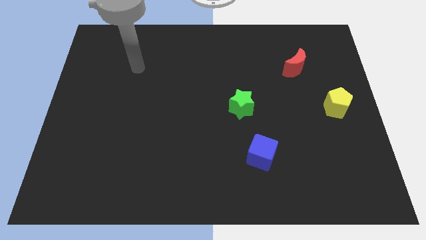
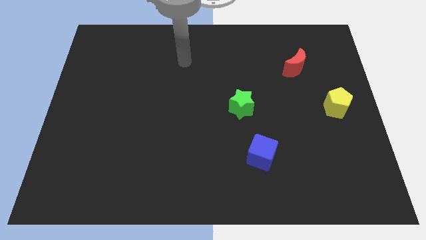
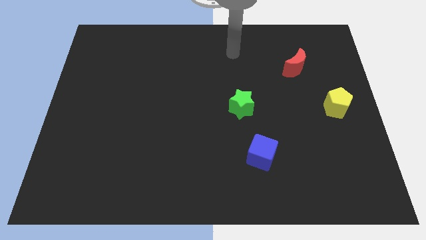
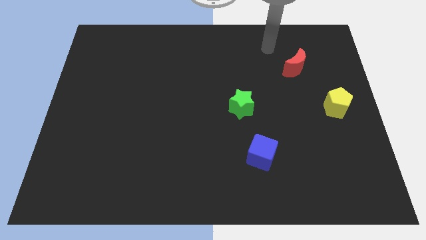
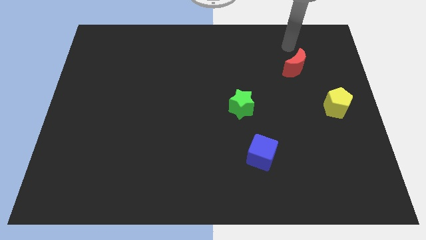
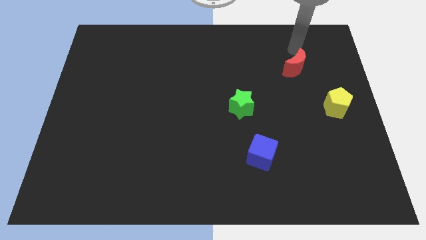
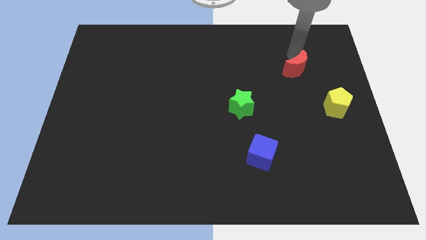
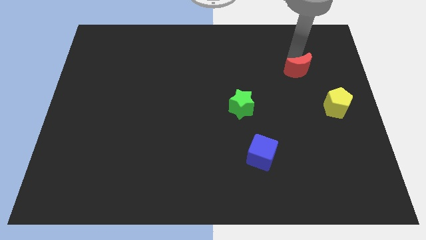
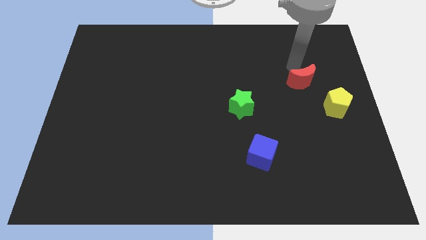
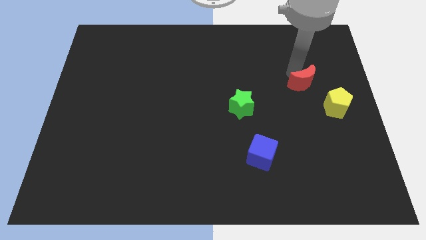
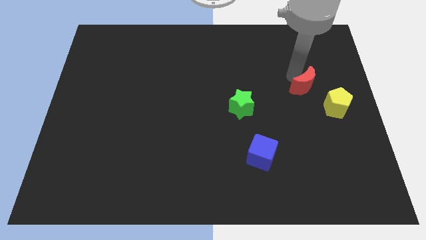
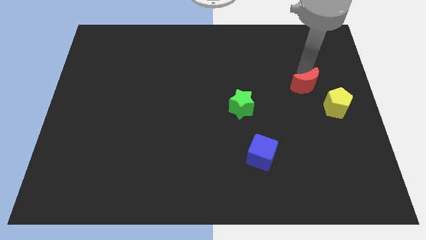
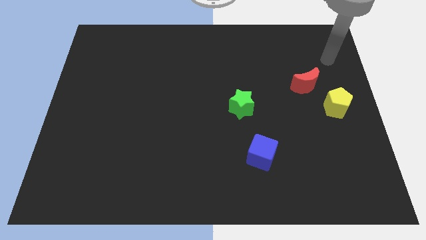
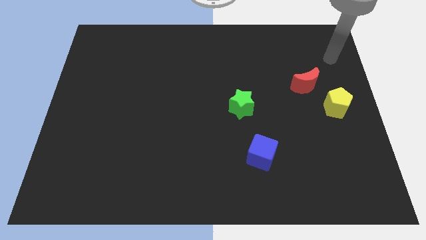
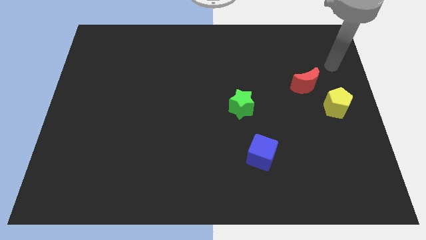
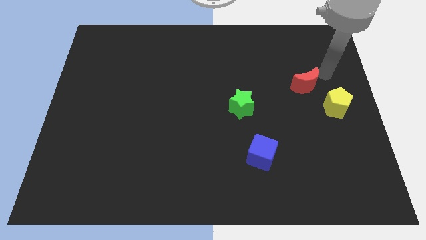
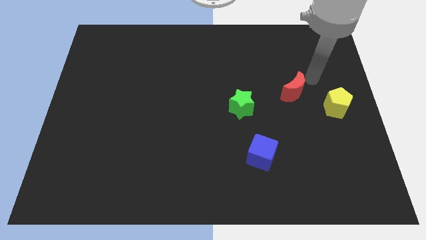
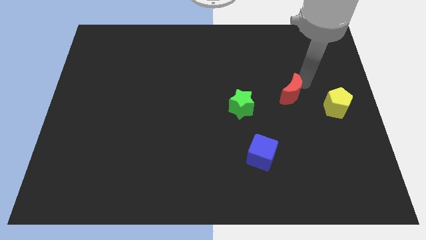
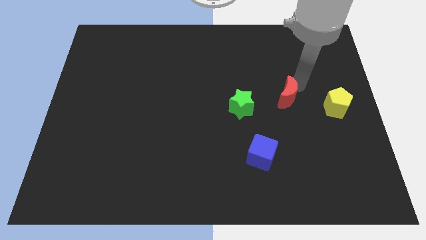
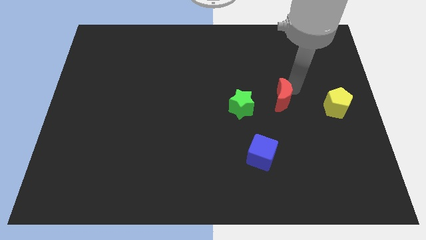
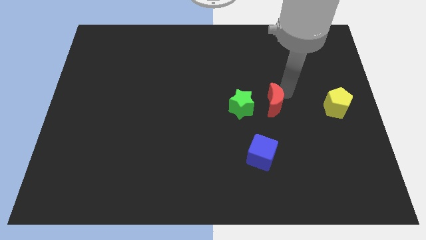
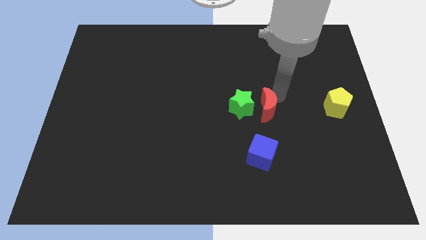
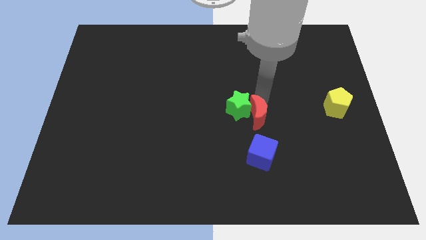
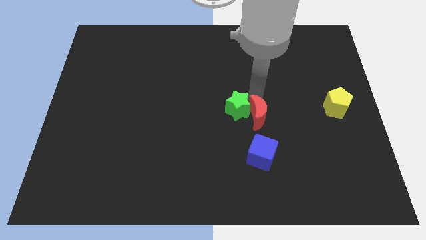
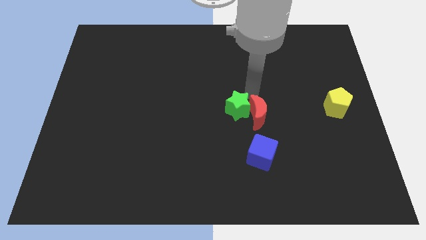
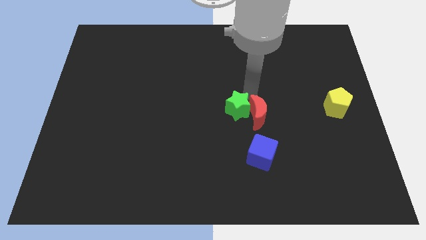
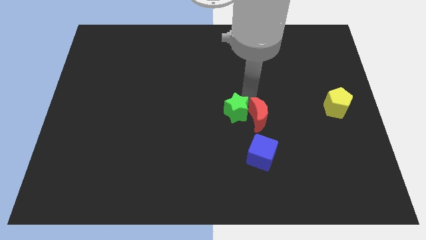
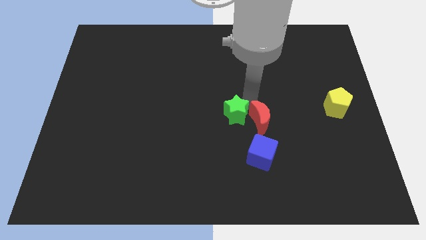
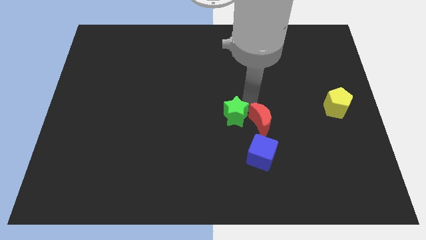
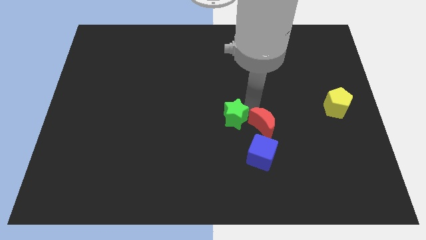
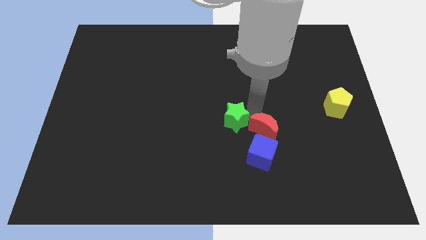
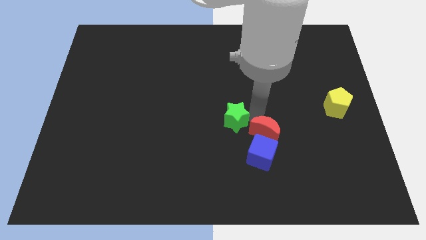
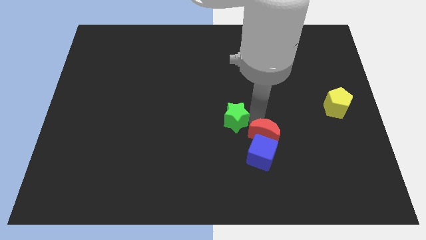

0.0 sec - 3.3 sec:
put the red moon close to the cube

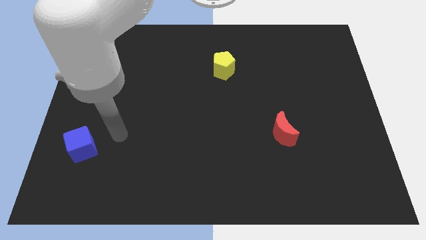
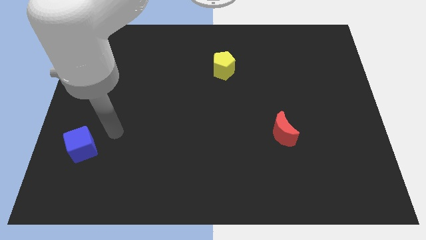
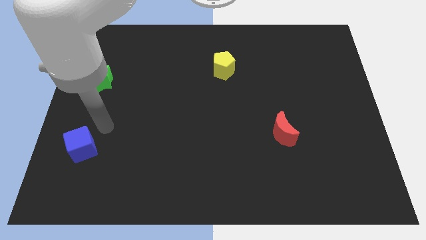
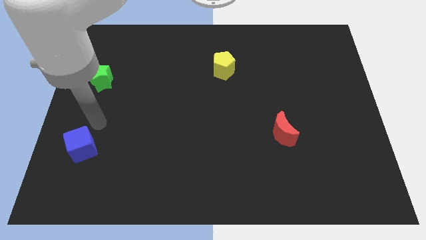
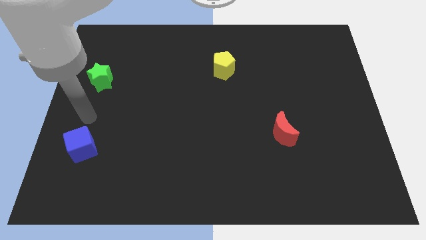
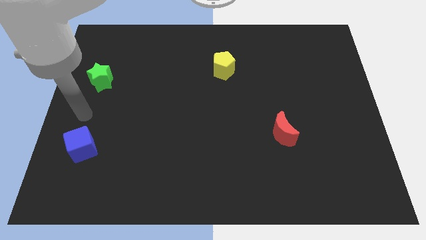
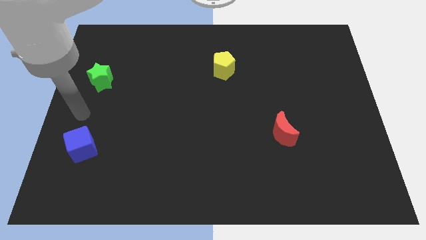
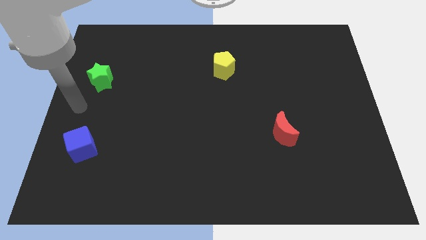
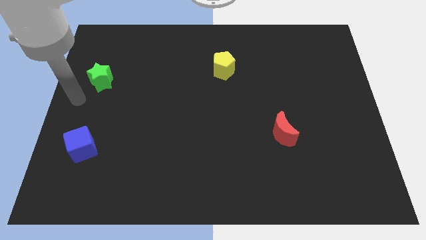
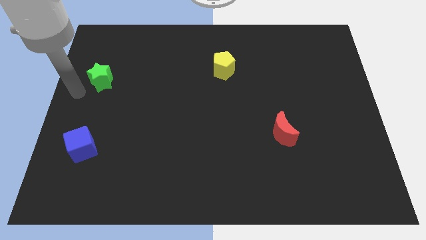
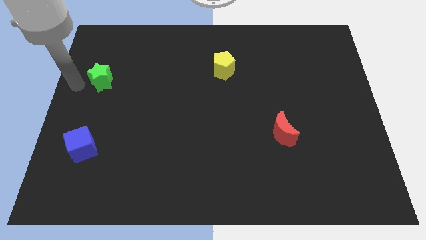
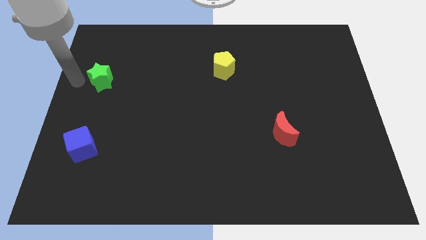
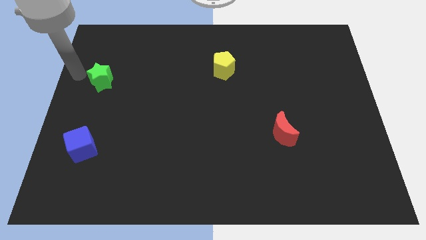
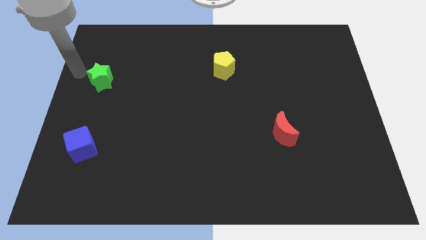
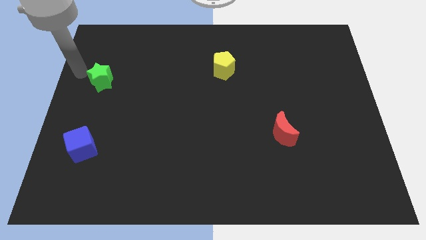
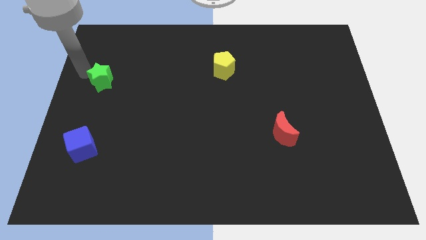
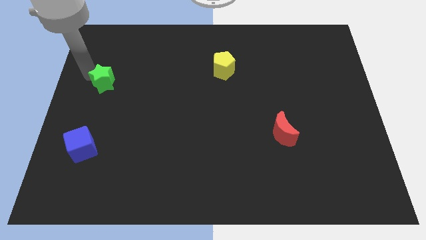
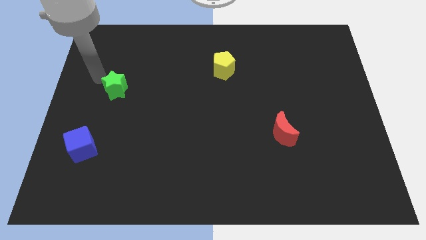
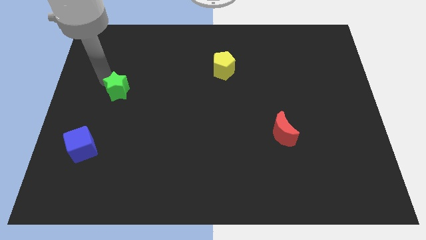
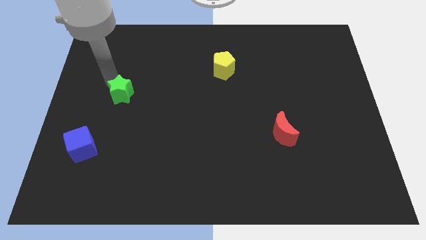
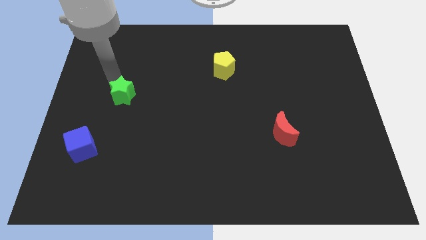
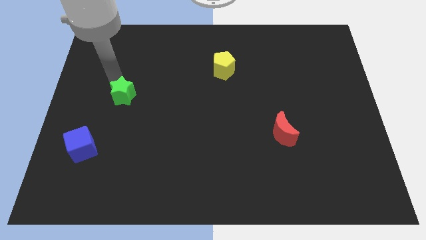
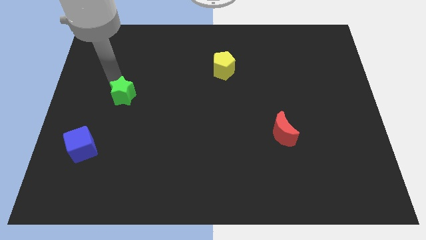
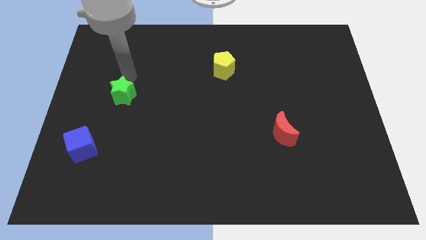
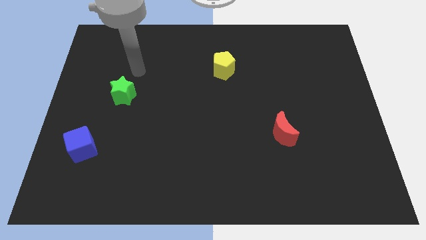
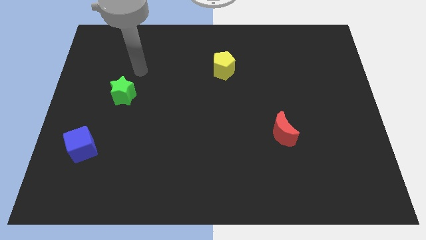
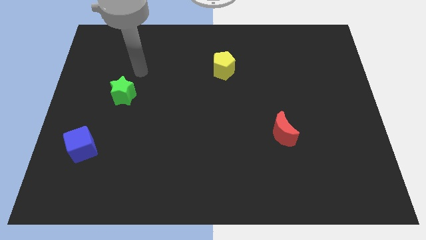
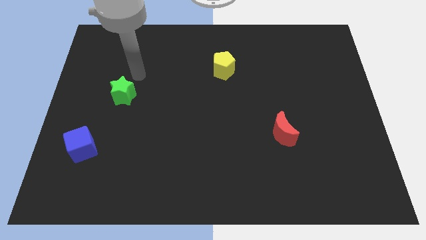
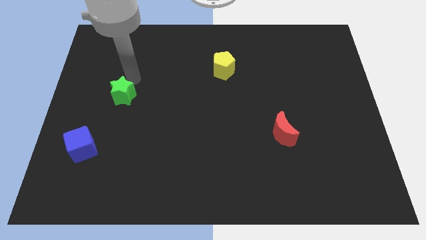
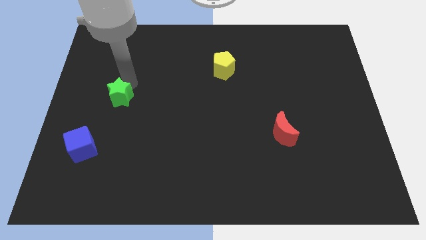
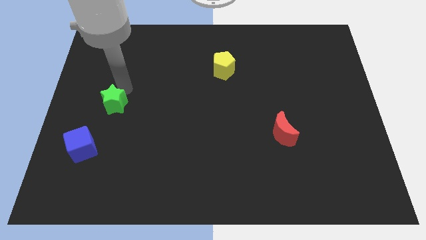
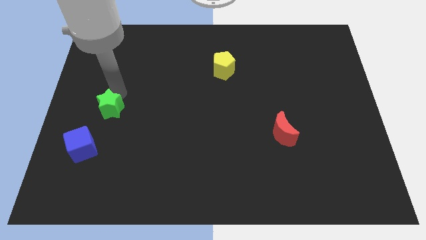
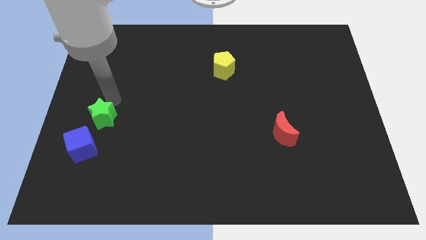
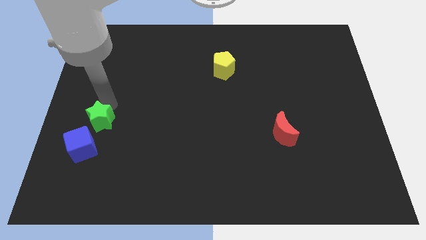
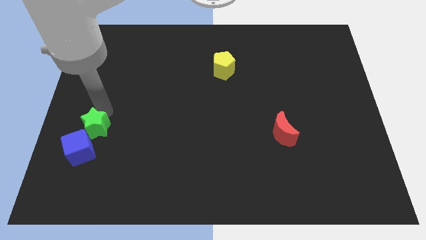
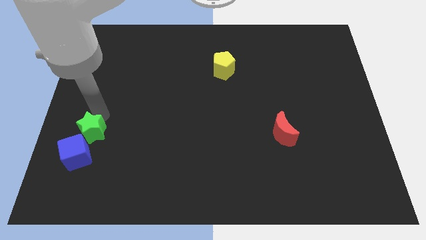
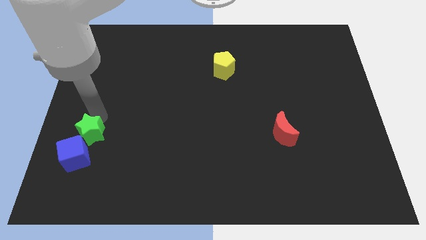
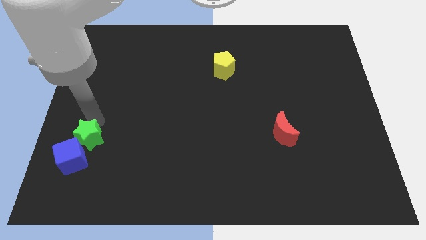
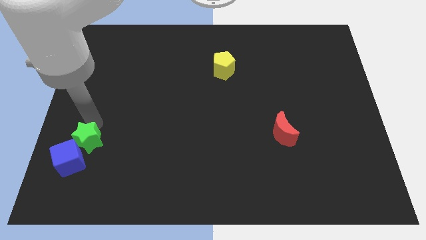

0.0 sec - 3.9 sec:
move the star next to the blue cube

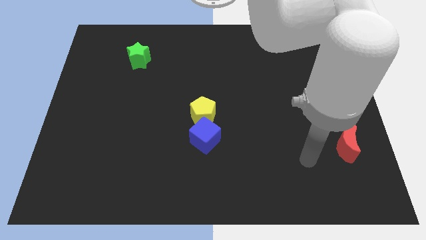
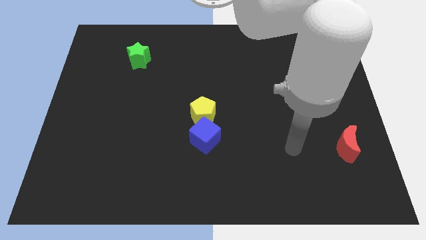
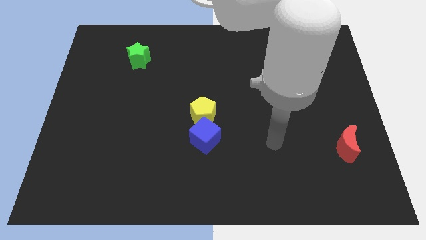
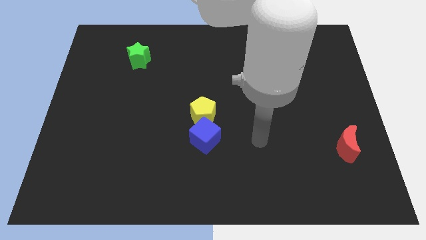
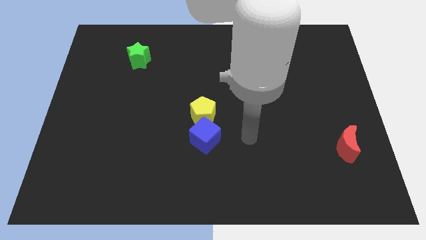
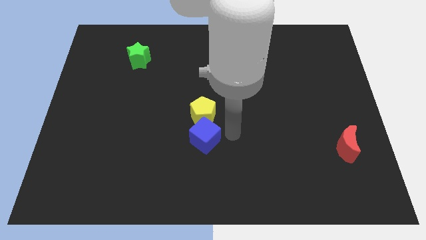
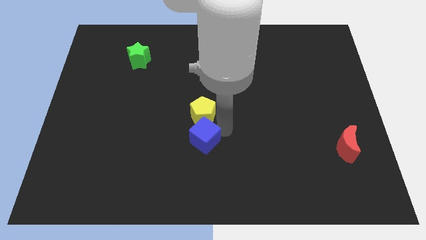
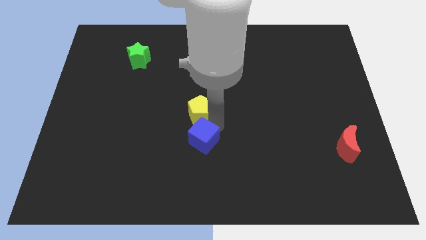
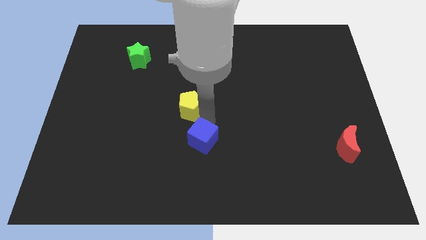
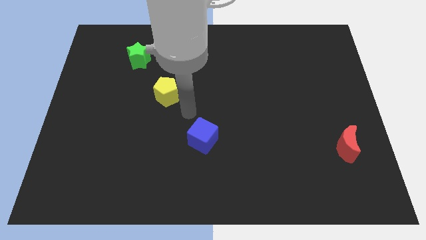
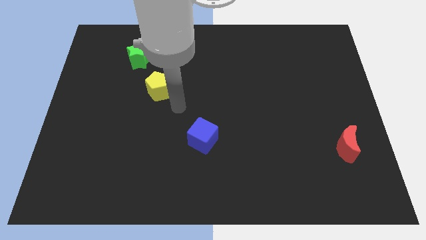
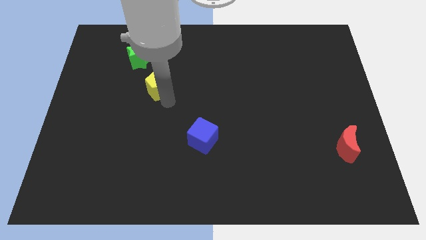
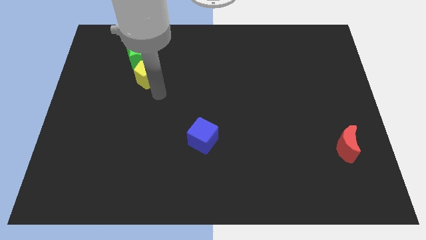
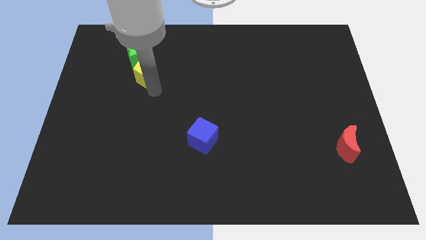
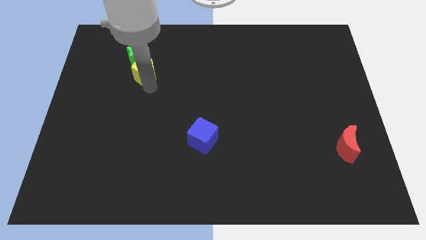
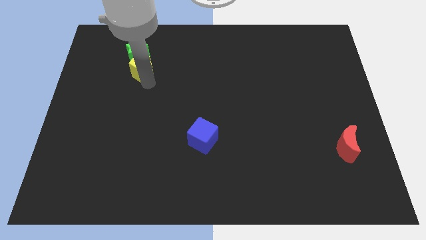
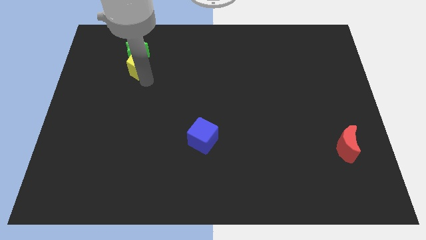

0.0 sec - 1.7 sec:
push the yellow block towards the green star
